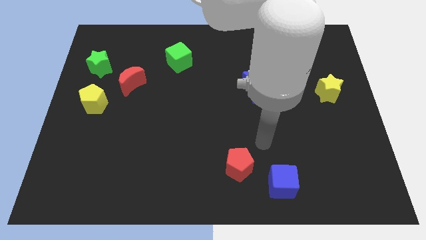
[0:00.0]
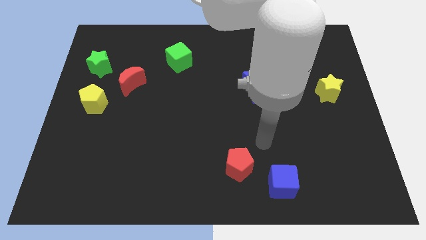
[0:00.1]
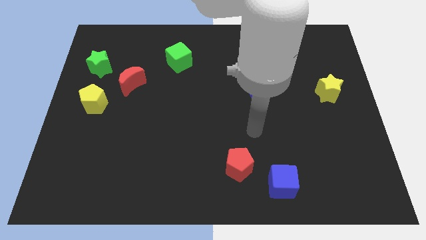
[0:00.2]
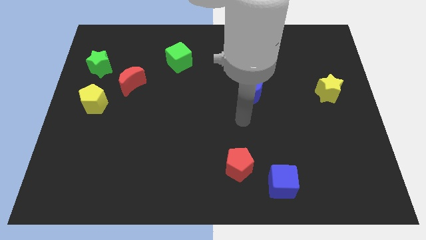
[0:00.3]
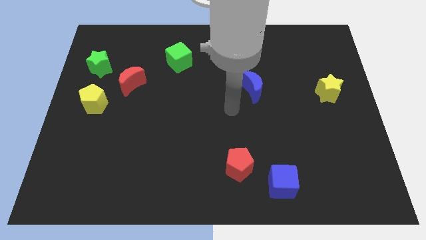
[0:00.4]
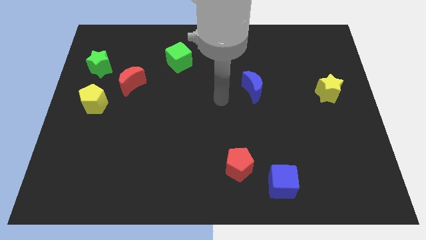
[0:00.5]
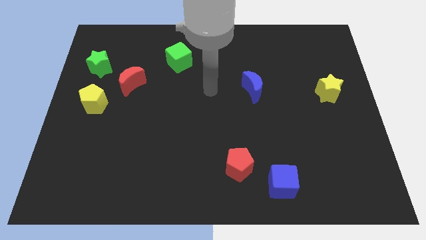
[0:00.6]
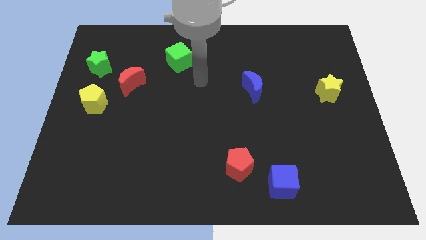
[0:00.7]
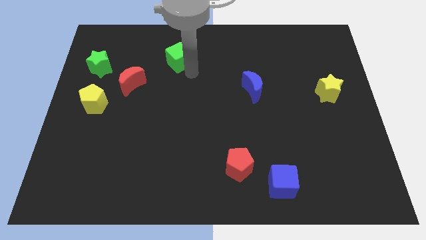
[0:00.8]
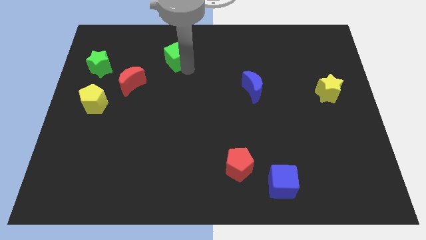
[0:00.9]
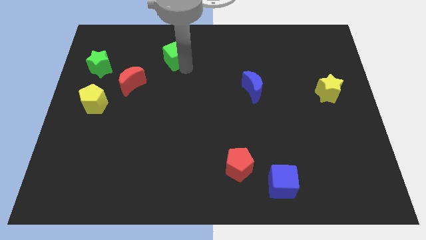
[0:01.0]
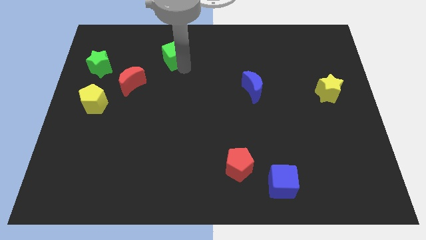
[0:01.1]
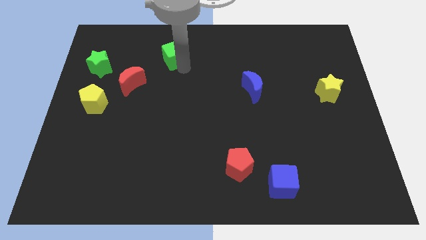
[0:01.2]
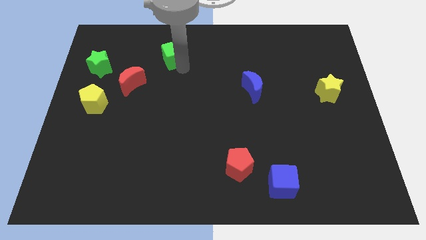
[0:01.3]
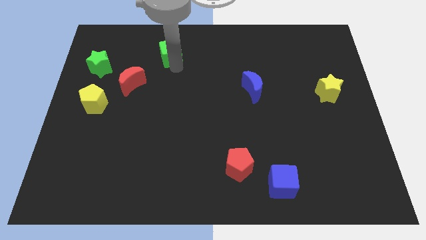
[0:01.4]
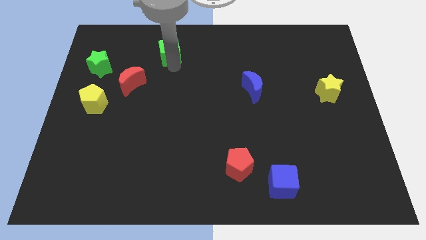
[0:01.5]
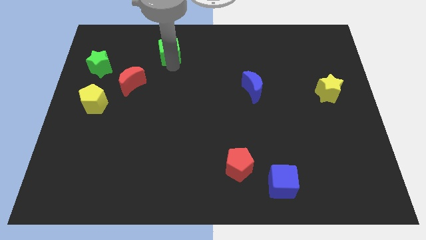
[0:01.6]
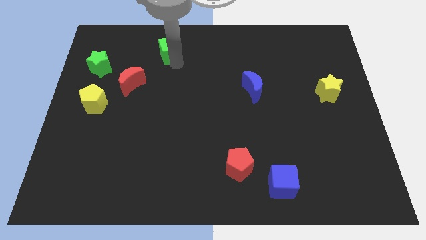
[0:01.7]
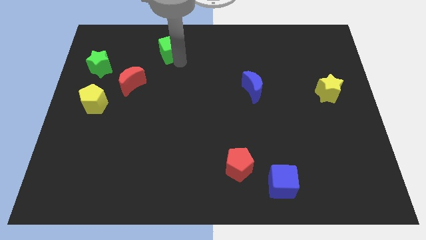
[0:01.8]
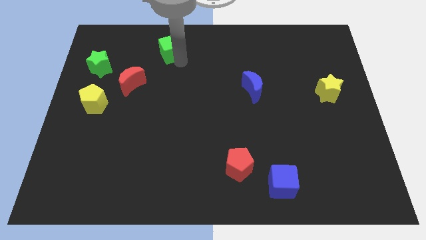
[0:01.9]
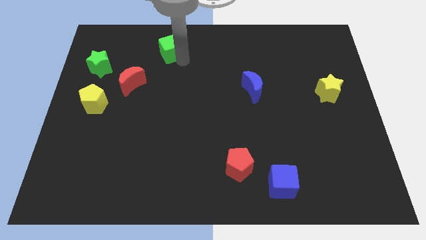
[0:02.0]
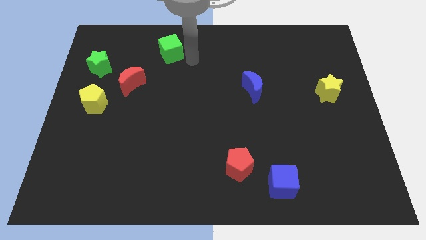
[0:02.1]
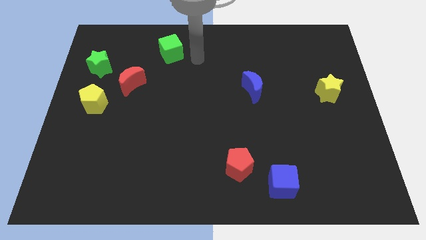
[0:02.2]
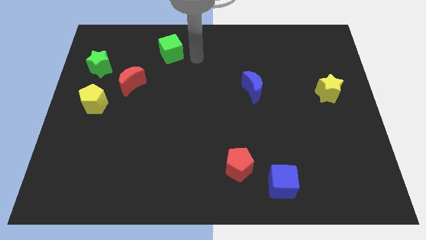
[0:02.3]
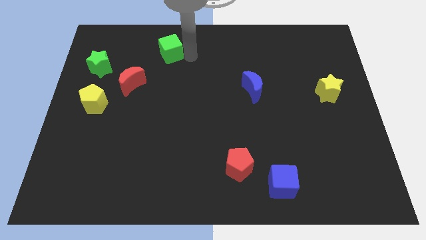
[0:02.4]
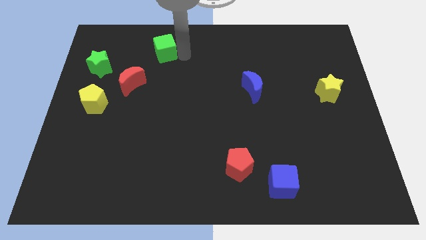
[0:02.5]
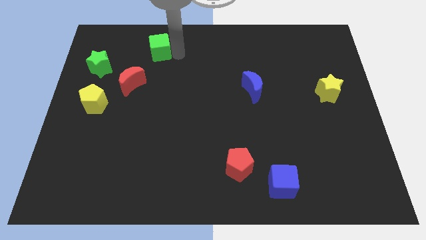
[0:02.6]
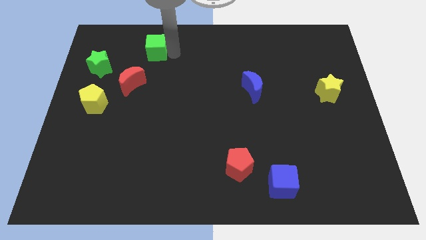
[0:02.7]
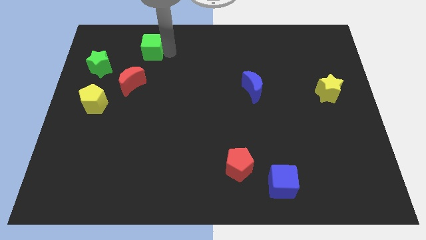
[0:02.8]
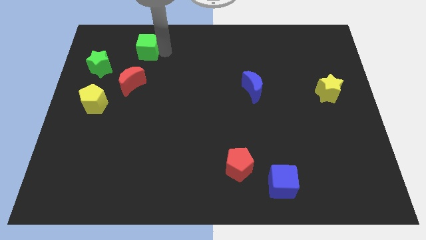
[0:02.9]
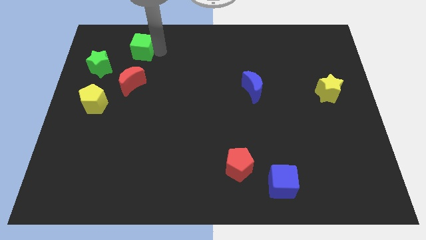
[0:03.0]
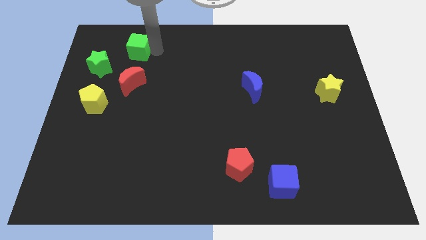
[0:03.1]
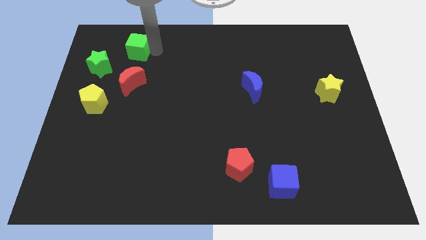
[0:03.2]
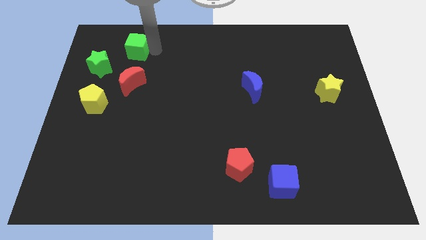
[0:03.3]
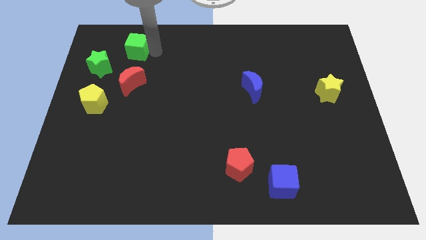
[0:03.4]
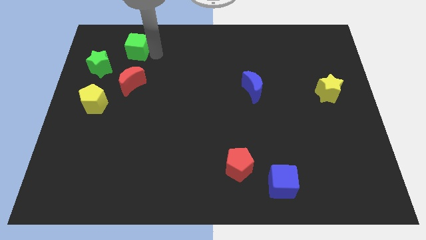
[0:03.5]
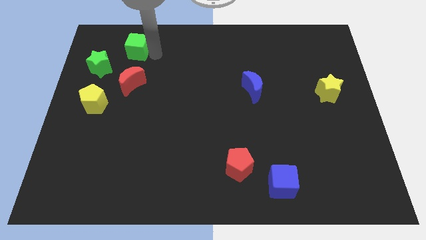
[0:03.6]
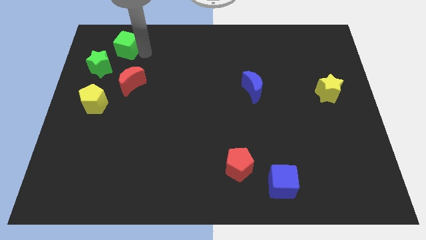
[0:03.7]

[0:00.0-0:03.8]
push the green cube diagonal to green star

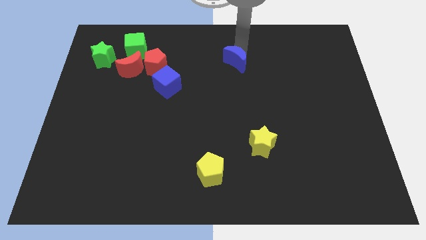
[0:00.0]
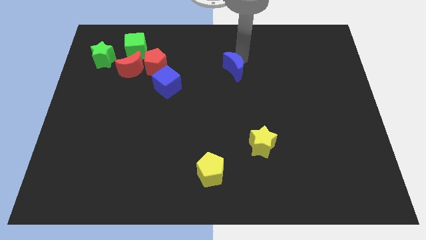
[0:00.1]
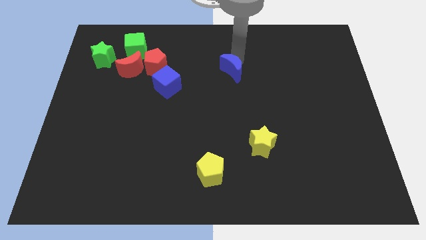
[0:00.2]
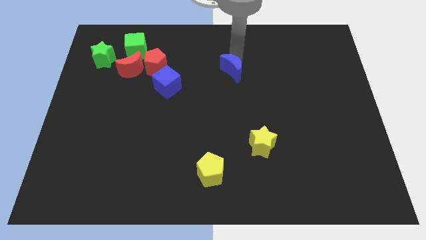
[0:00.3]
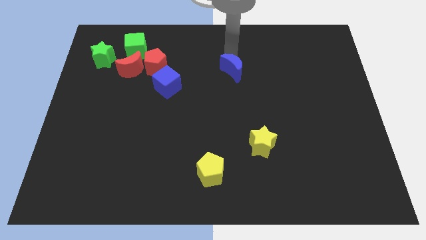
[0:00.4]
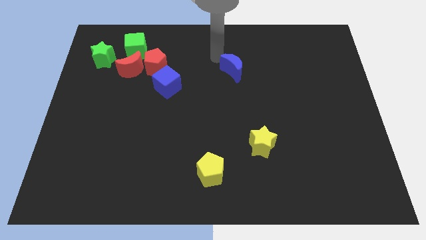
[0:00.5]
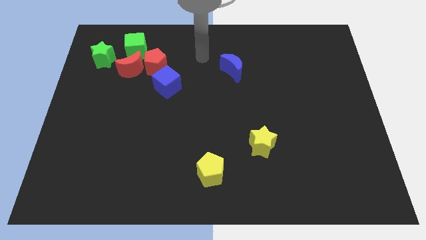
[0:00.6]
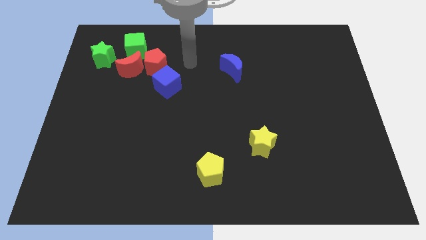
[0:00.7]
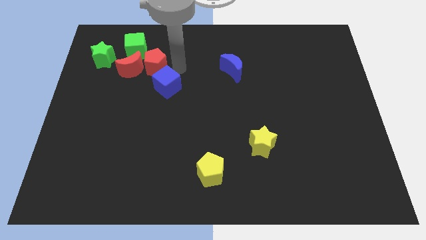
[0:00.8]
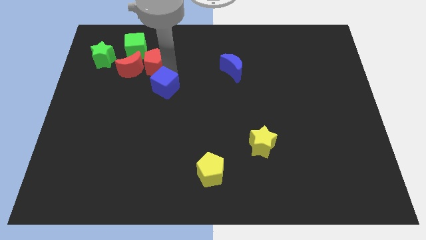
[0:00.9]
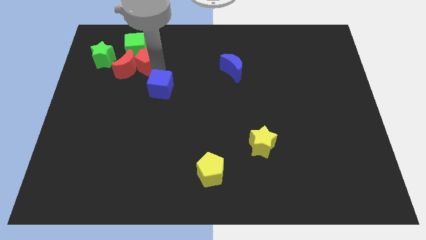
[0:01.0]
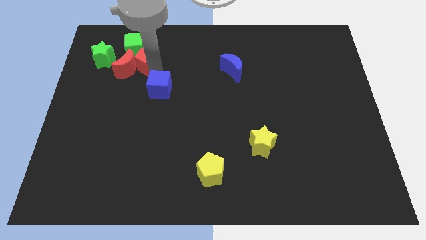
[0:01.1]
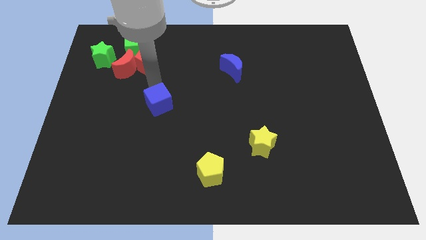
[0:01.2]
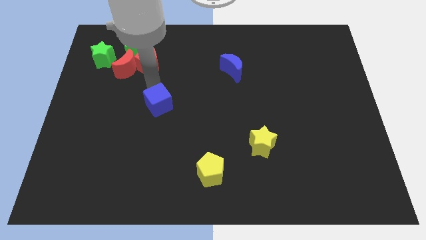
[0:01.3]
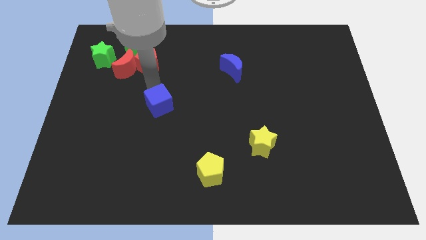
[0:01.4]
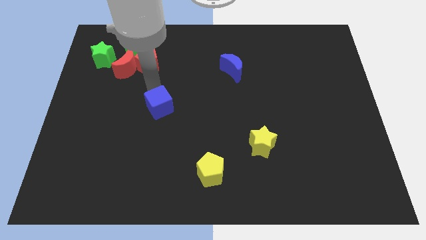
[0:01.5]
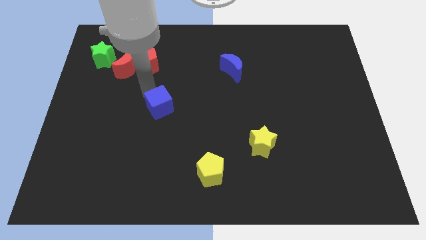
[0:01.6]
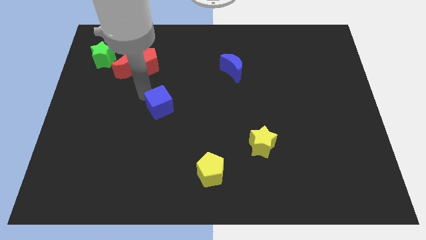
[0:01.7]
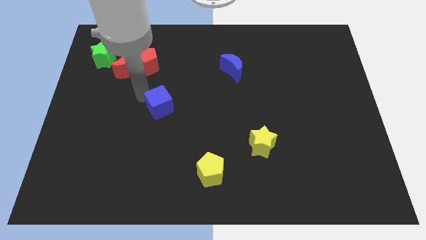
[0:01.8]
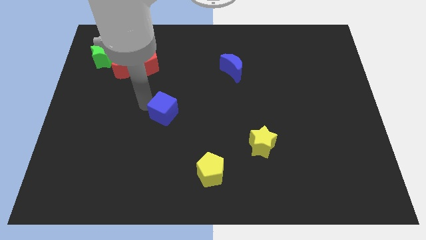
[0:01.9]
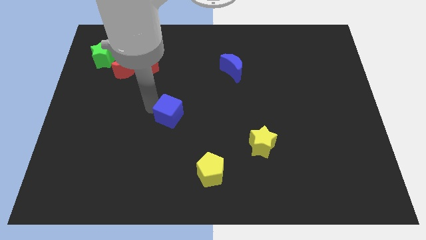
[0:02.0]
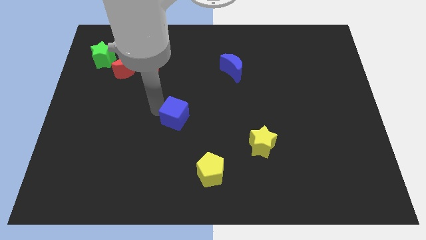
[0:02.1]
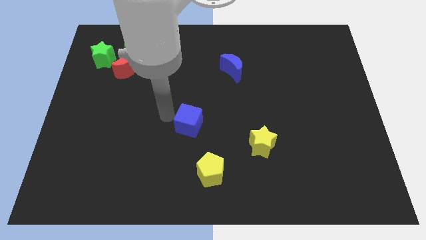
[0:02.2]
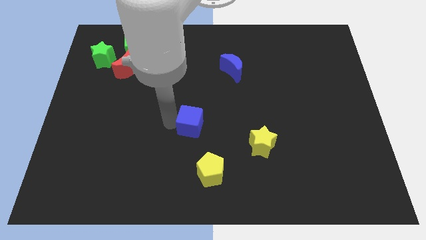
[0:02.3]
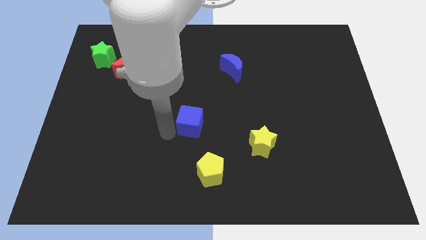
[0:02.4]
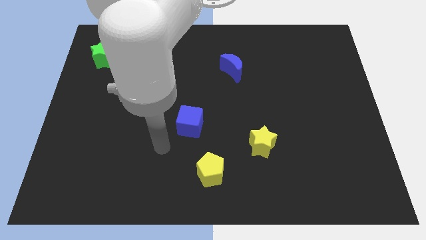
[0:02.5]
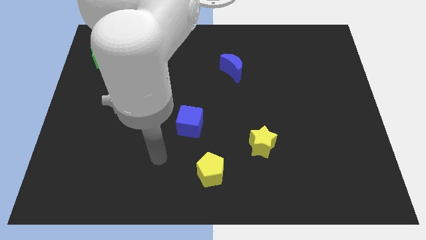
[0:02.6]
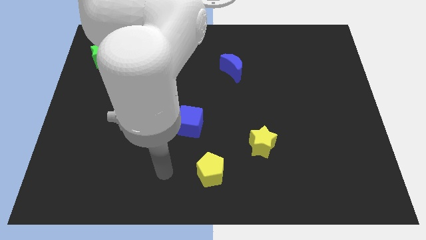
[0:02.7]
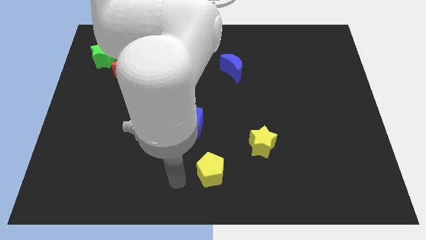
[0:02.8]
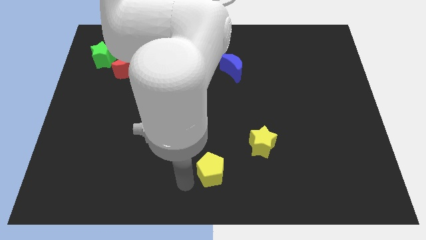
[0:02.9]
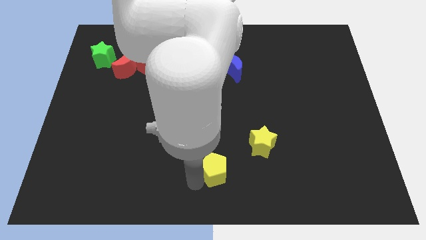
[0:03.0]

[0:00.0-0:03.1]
separate blue cube from the red pentagon

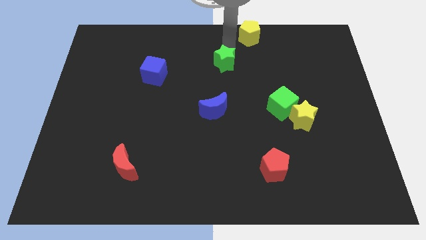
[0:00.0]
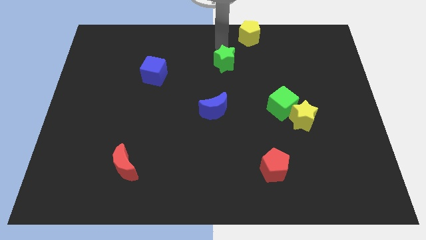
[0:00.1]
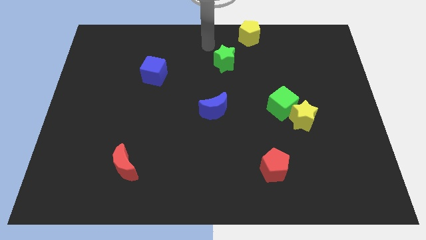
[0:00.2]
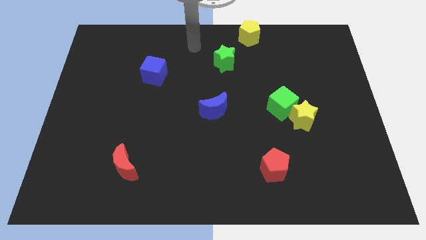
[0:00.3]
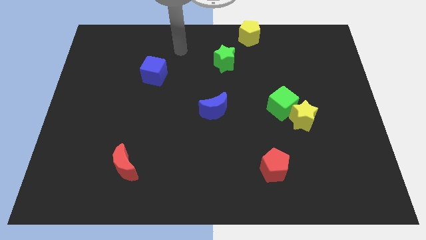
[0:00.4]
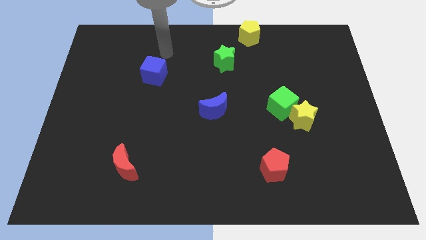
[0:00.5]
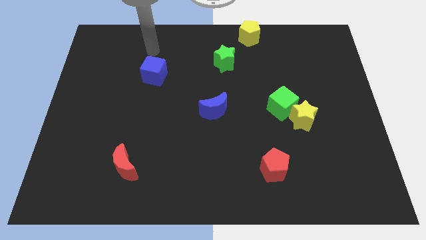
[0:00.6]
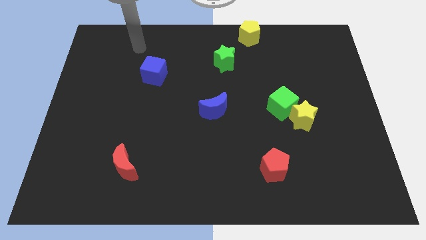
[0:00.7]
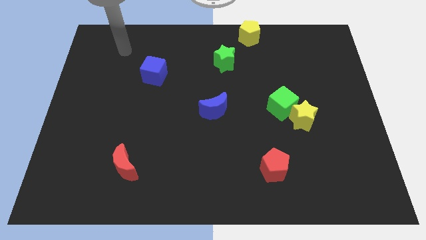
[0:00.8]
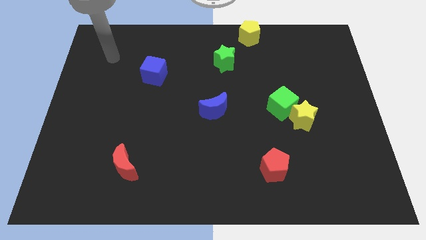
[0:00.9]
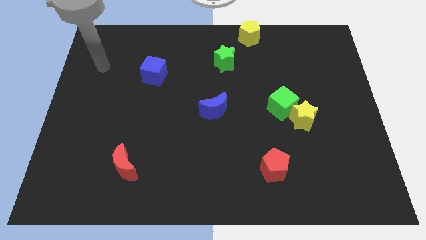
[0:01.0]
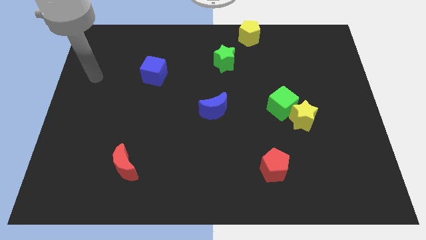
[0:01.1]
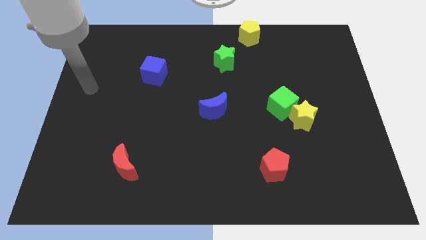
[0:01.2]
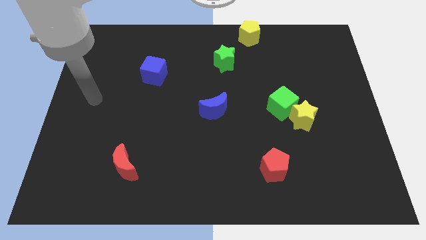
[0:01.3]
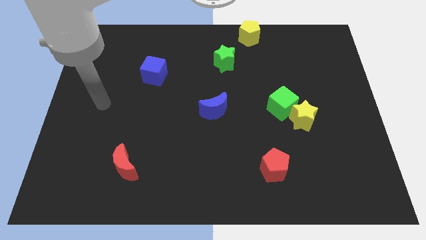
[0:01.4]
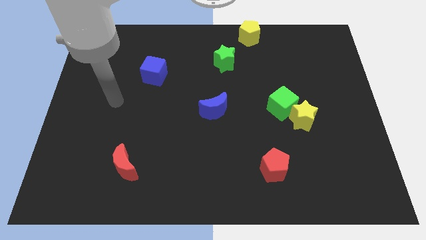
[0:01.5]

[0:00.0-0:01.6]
move your arm away from the green star

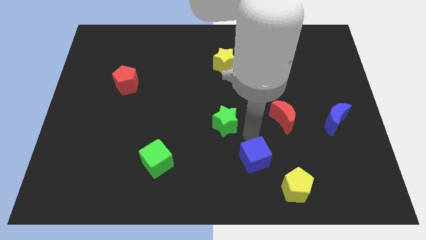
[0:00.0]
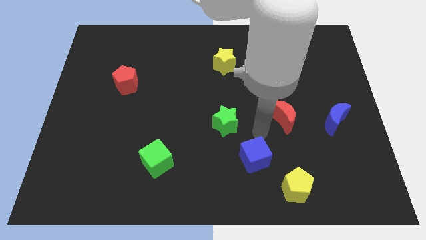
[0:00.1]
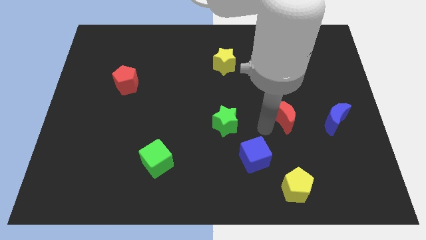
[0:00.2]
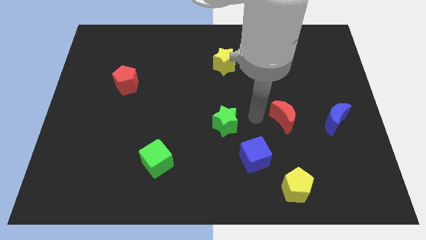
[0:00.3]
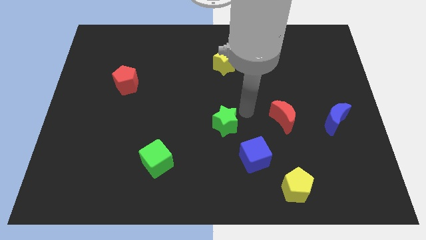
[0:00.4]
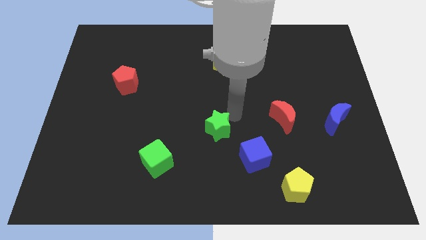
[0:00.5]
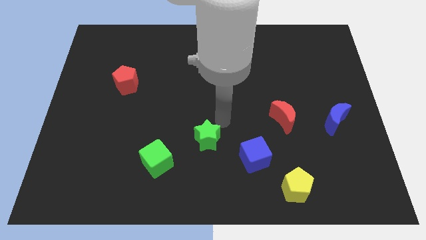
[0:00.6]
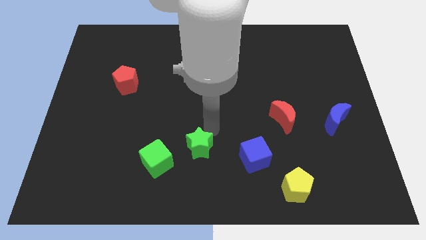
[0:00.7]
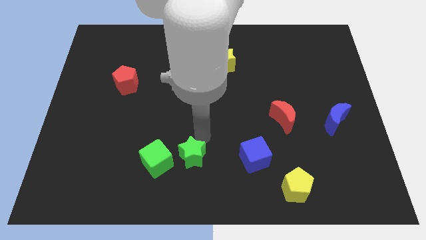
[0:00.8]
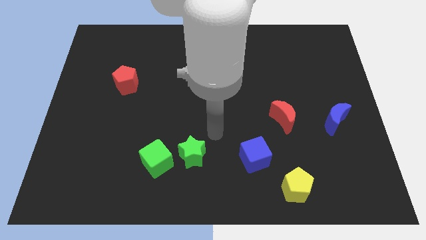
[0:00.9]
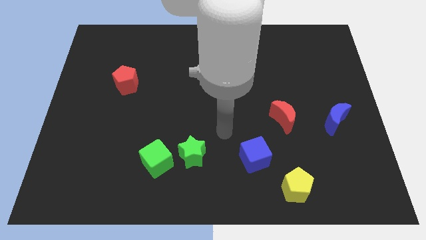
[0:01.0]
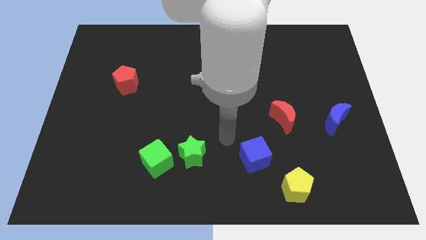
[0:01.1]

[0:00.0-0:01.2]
push the green star to the right of the green cube
